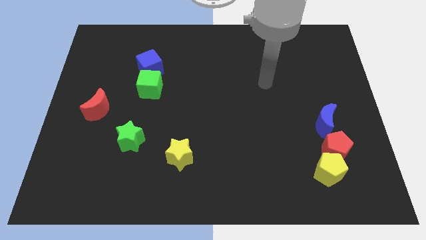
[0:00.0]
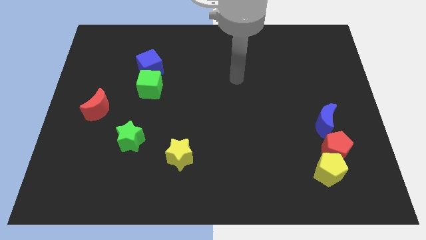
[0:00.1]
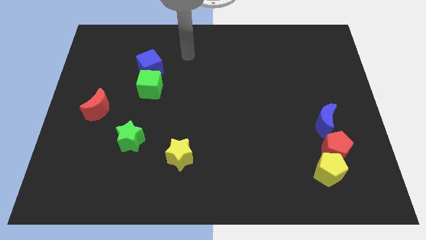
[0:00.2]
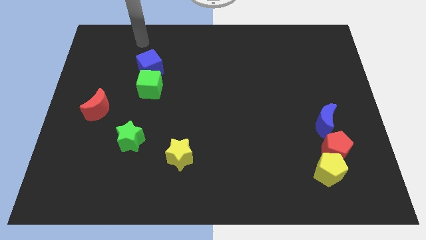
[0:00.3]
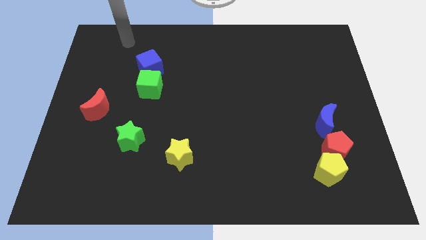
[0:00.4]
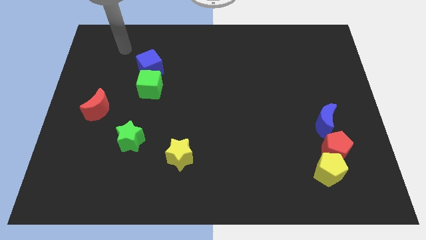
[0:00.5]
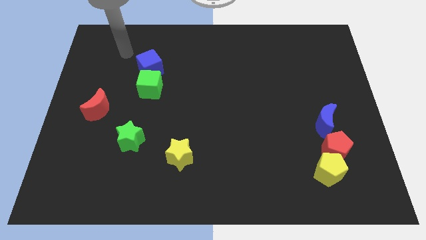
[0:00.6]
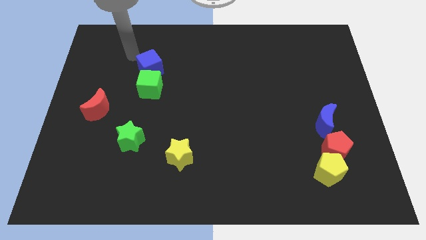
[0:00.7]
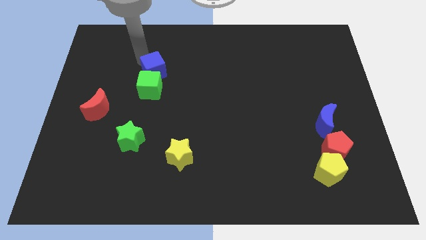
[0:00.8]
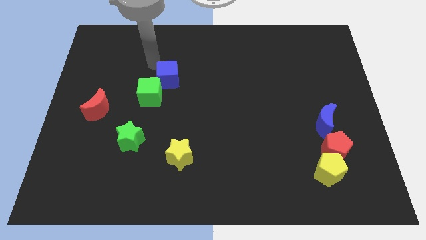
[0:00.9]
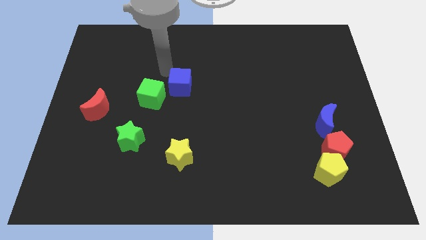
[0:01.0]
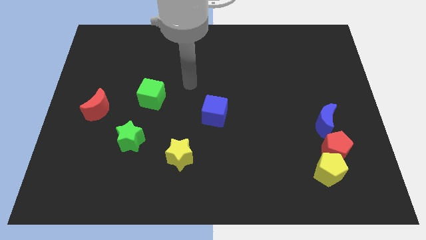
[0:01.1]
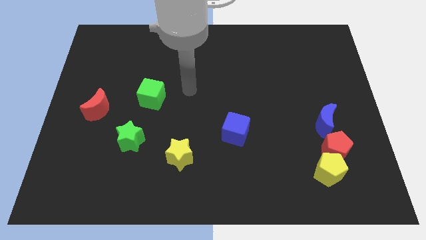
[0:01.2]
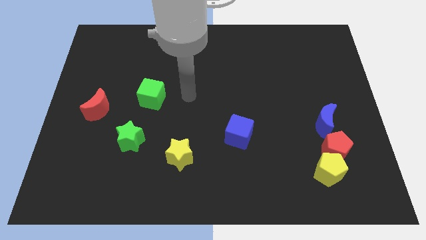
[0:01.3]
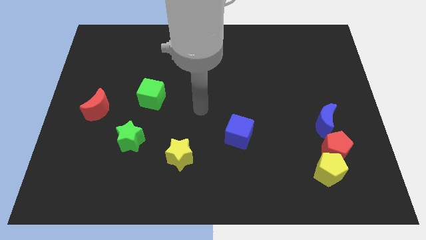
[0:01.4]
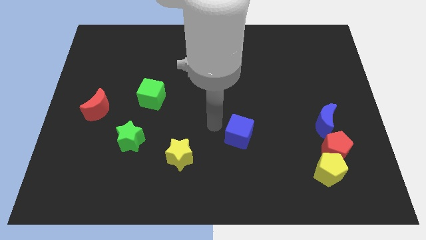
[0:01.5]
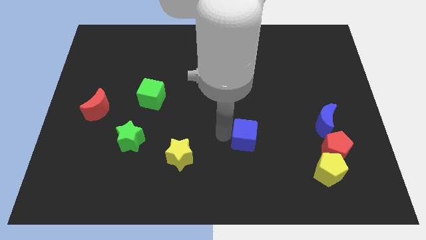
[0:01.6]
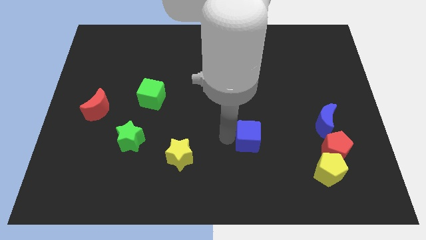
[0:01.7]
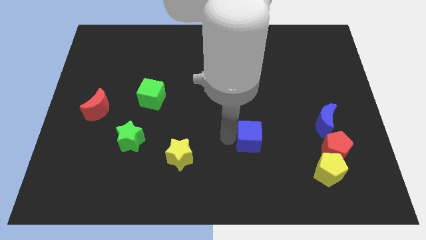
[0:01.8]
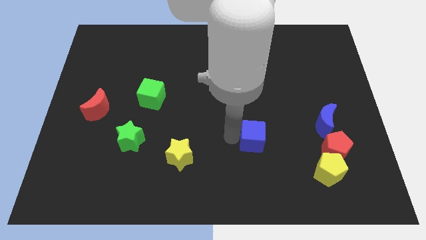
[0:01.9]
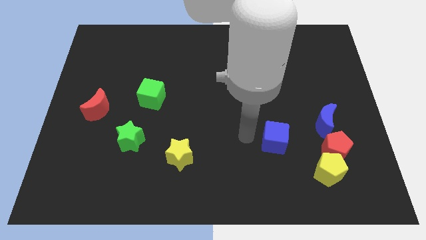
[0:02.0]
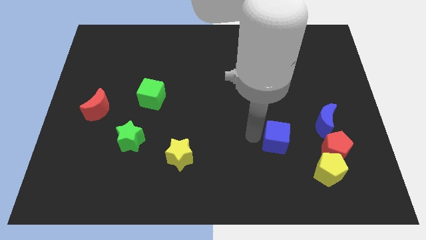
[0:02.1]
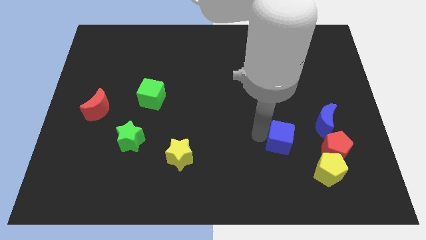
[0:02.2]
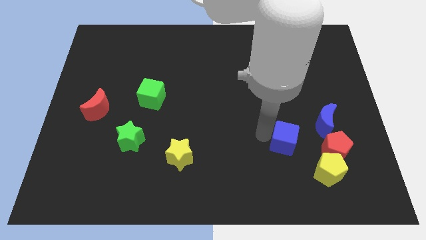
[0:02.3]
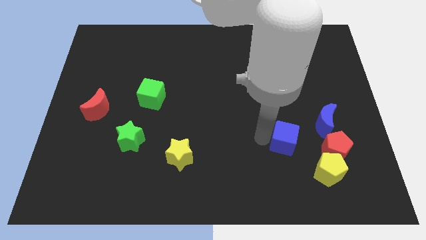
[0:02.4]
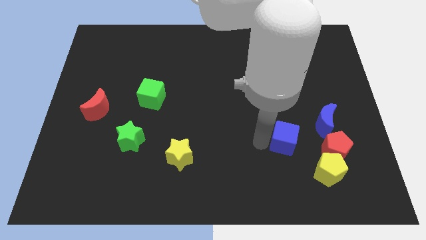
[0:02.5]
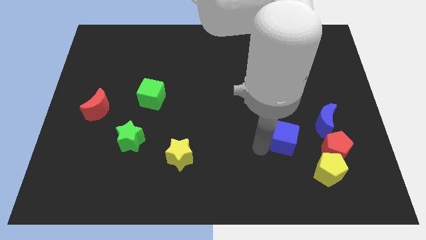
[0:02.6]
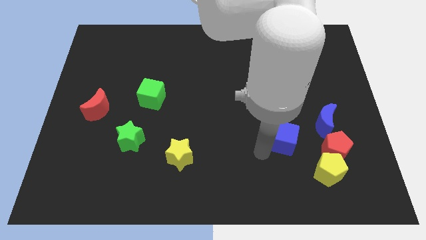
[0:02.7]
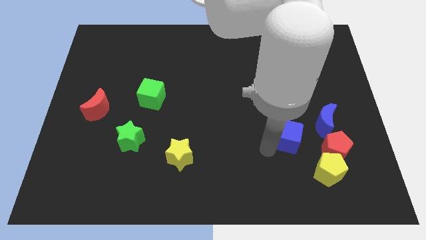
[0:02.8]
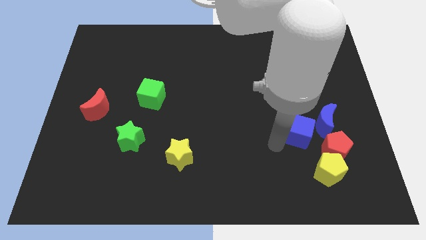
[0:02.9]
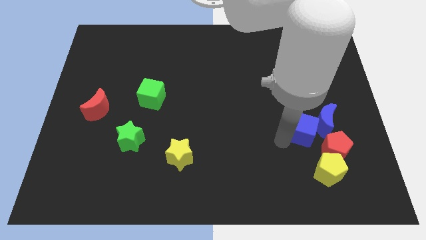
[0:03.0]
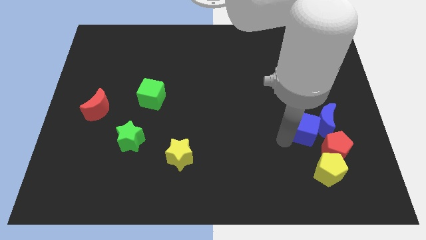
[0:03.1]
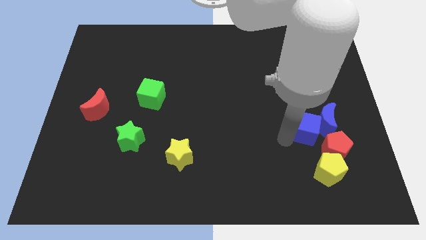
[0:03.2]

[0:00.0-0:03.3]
push the blue cube to the blue moon

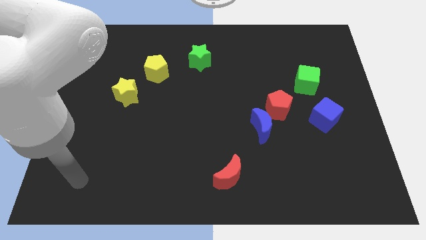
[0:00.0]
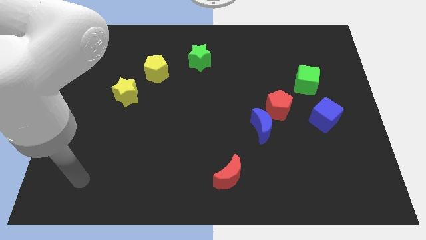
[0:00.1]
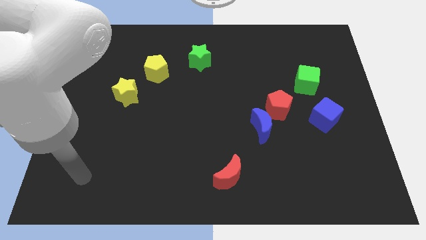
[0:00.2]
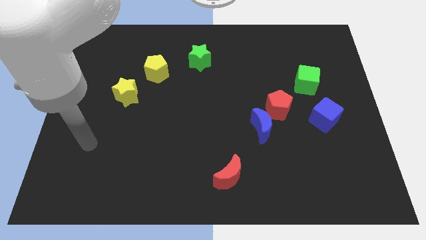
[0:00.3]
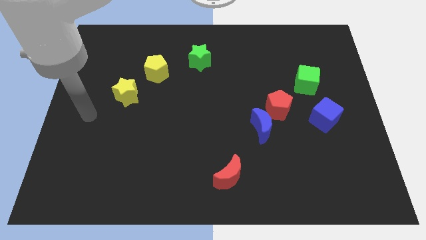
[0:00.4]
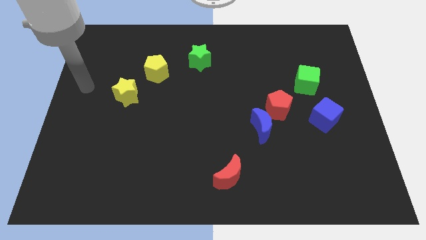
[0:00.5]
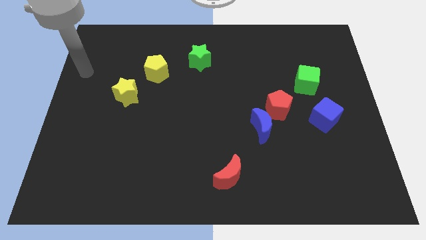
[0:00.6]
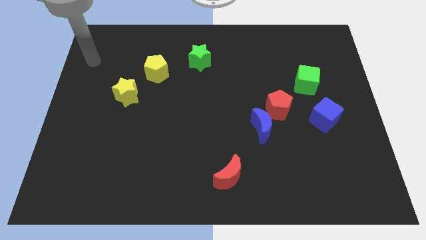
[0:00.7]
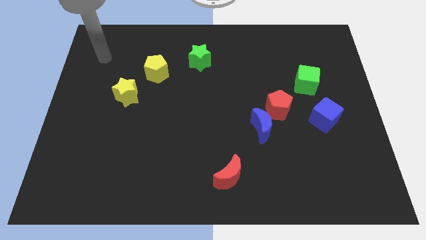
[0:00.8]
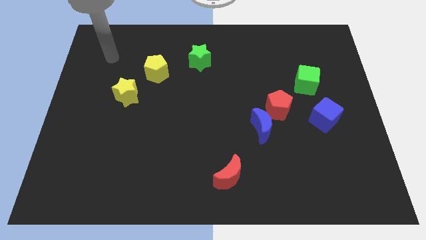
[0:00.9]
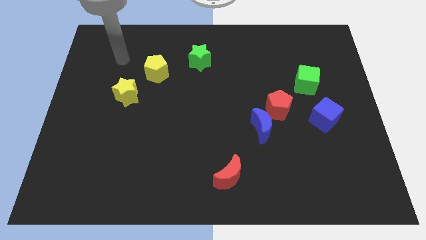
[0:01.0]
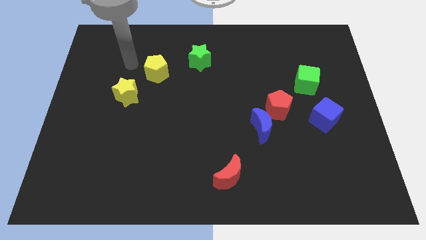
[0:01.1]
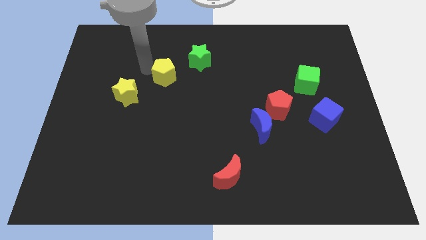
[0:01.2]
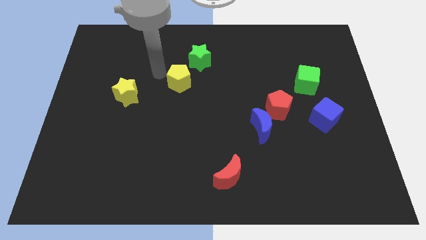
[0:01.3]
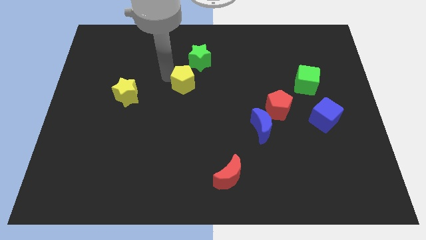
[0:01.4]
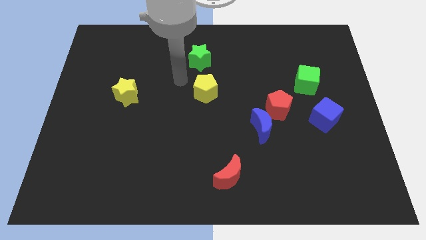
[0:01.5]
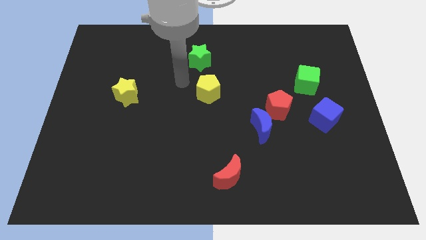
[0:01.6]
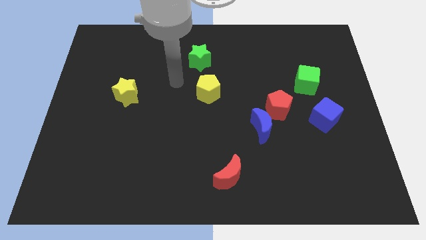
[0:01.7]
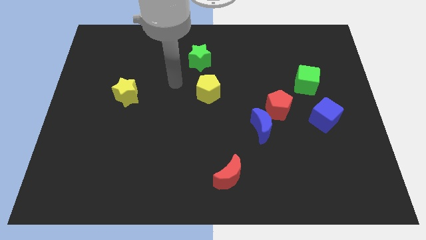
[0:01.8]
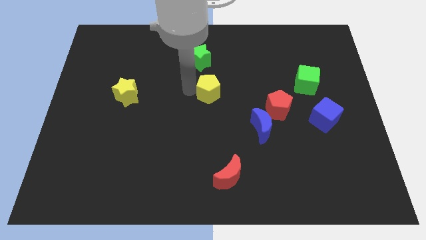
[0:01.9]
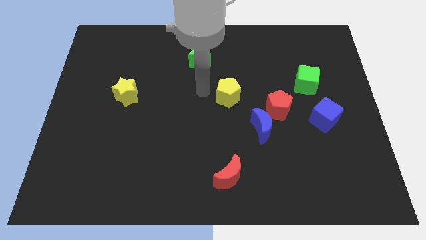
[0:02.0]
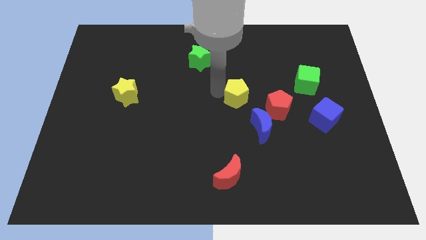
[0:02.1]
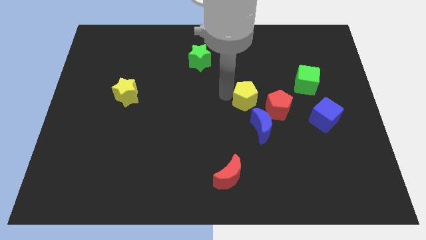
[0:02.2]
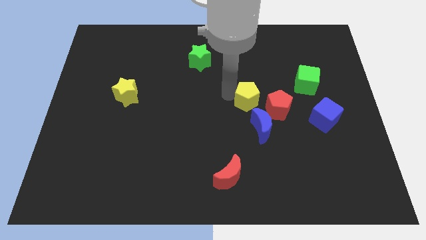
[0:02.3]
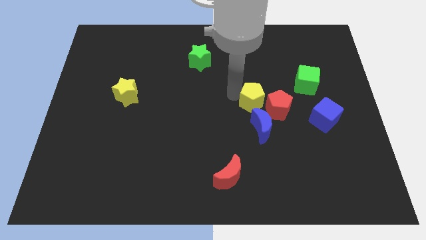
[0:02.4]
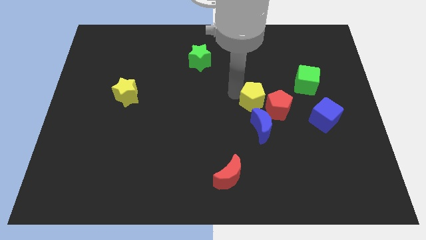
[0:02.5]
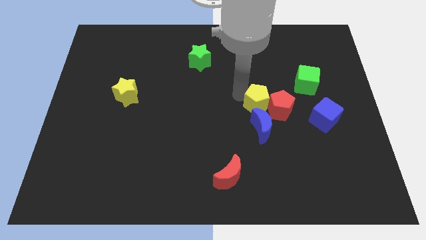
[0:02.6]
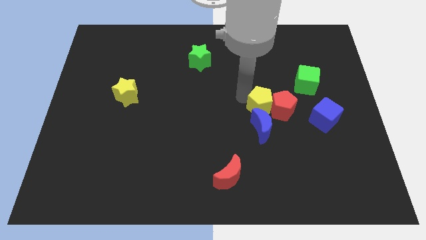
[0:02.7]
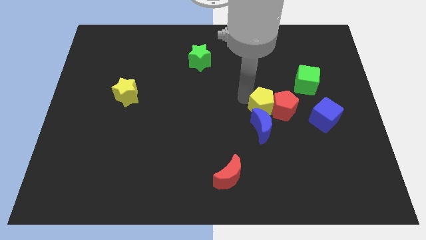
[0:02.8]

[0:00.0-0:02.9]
put the yellow pentagon to the red pentagon

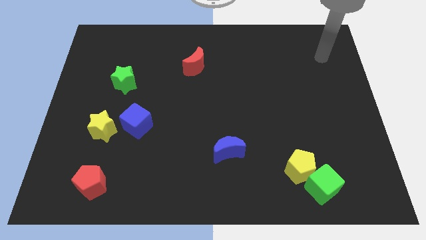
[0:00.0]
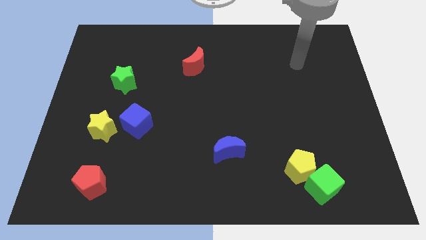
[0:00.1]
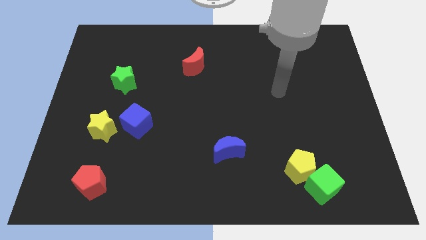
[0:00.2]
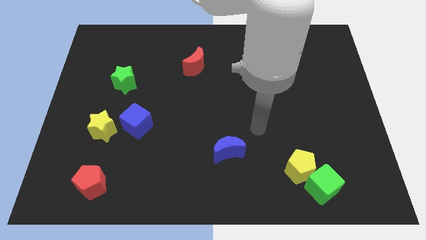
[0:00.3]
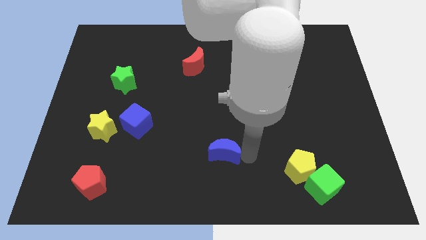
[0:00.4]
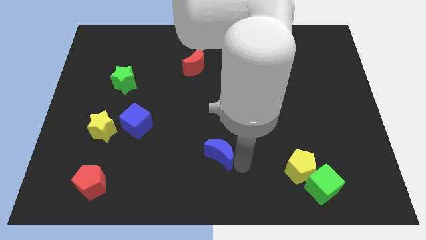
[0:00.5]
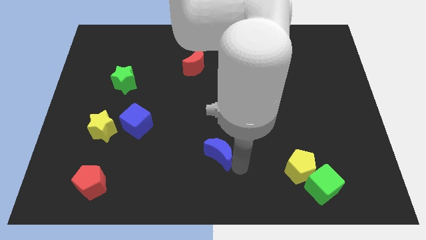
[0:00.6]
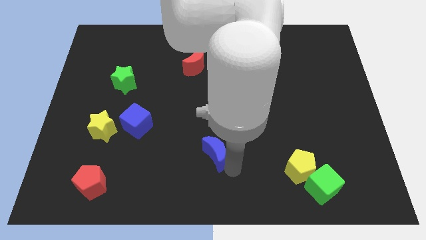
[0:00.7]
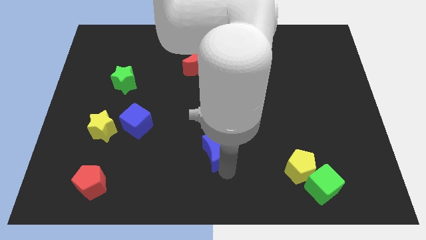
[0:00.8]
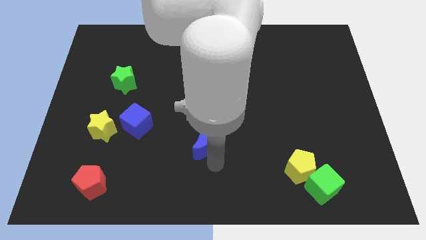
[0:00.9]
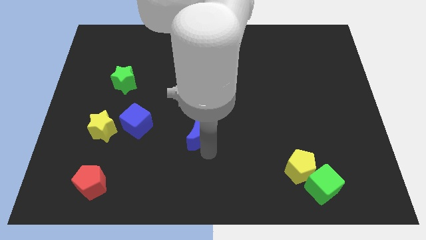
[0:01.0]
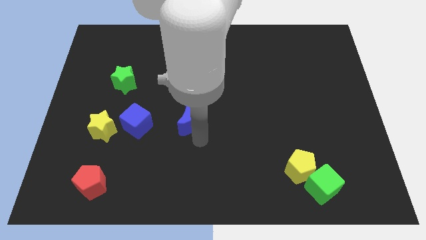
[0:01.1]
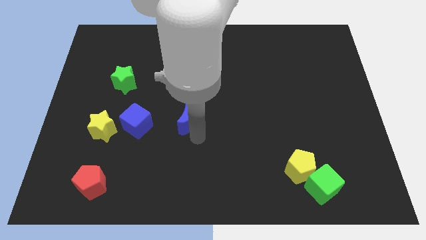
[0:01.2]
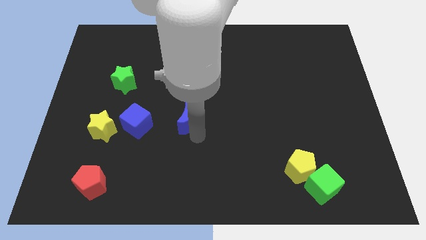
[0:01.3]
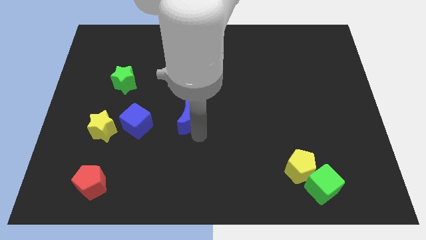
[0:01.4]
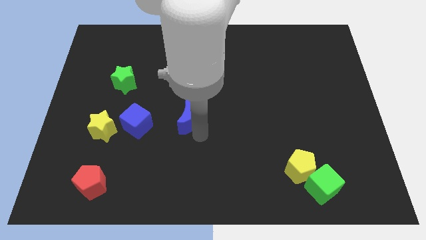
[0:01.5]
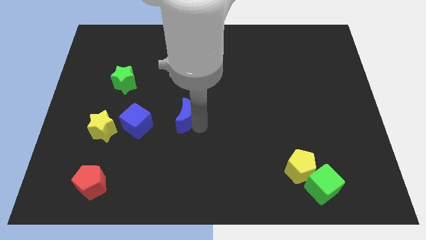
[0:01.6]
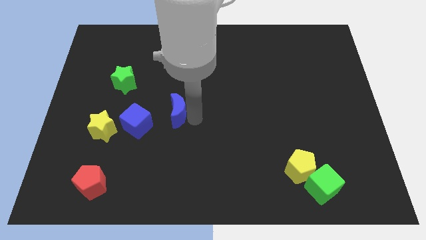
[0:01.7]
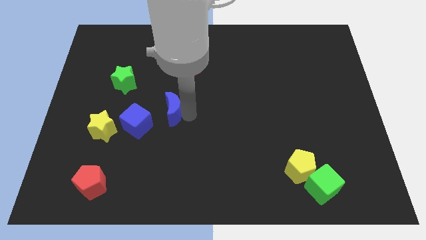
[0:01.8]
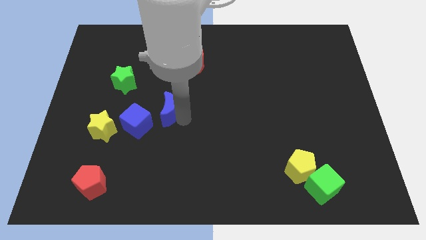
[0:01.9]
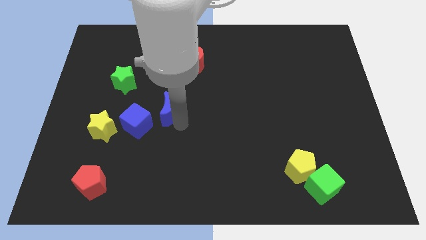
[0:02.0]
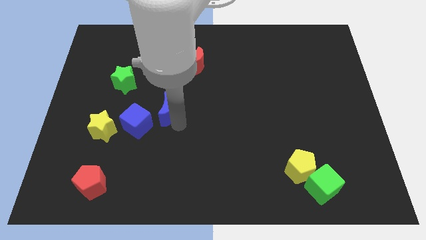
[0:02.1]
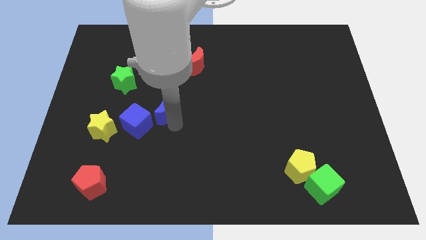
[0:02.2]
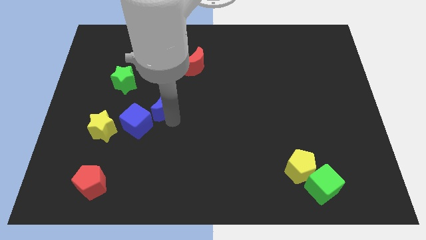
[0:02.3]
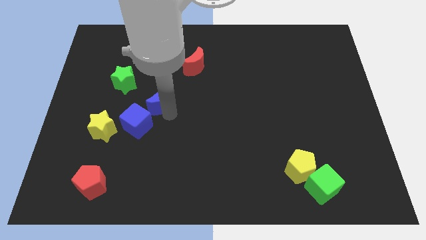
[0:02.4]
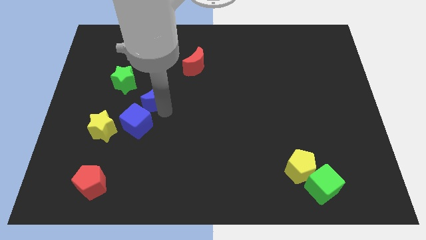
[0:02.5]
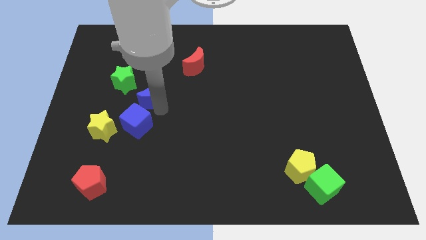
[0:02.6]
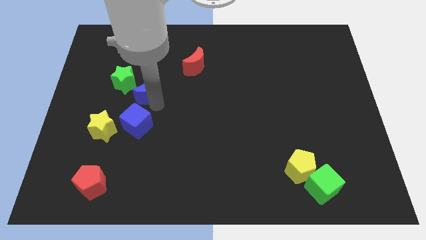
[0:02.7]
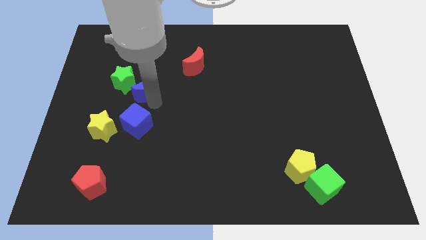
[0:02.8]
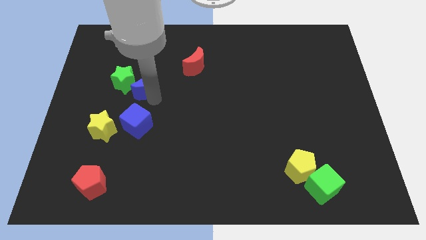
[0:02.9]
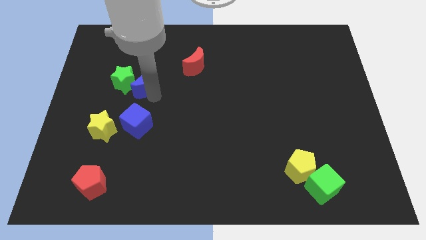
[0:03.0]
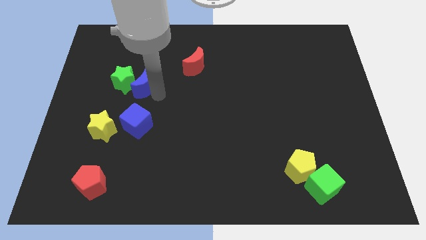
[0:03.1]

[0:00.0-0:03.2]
put the blue moon to the green star
